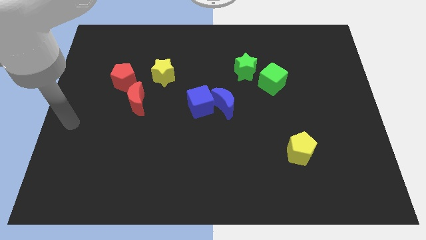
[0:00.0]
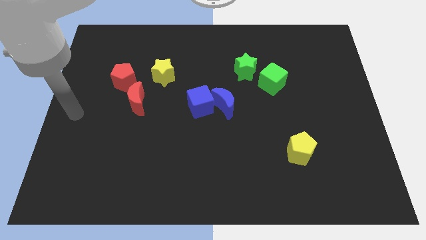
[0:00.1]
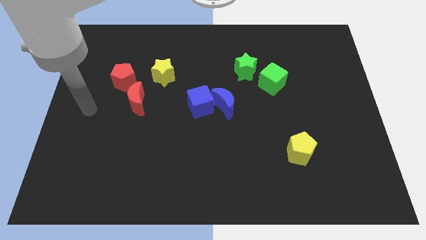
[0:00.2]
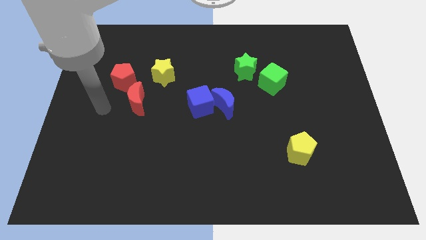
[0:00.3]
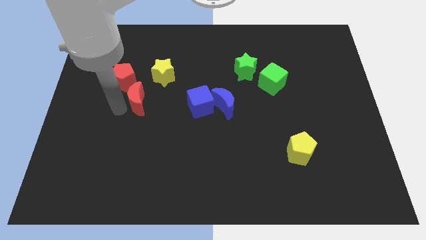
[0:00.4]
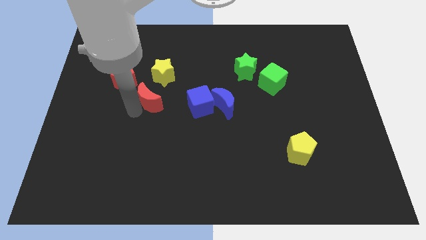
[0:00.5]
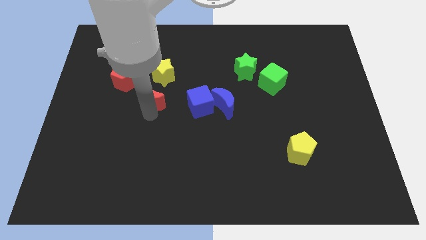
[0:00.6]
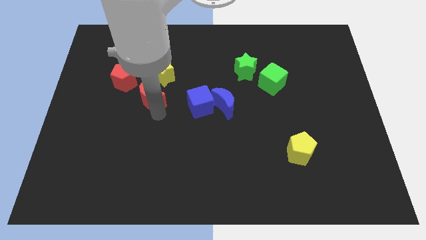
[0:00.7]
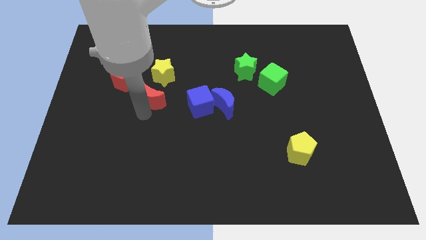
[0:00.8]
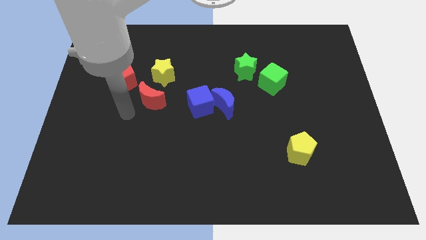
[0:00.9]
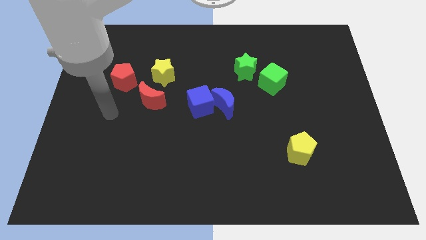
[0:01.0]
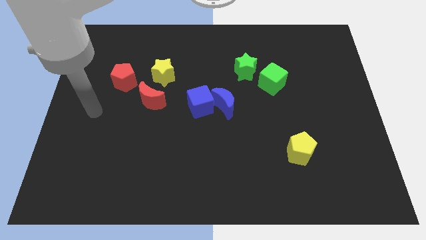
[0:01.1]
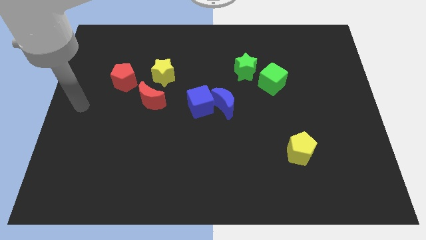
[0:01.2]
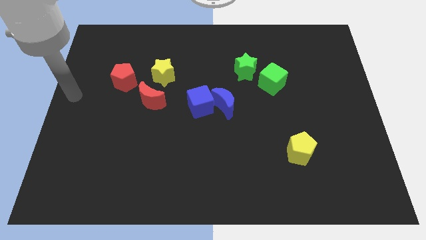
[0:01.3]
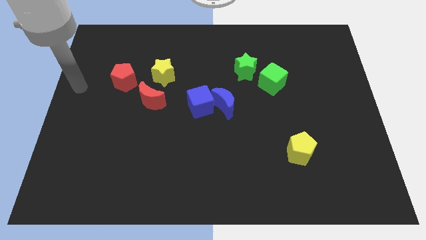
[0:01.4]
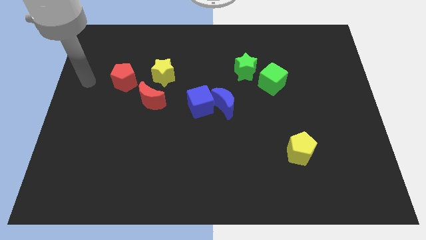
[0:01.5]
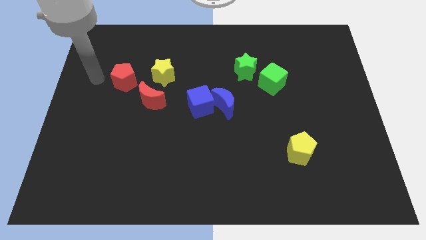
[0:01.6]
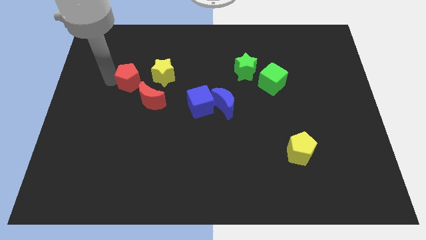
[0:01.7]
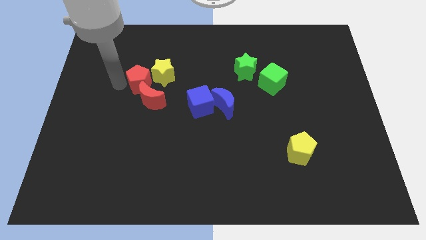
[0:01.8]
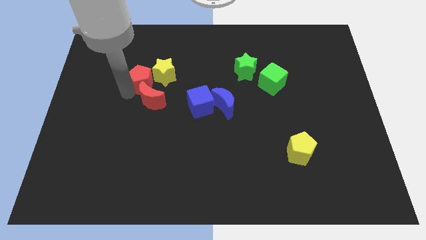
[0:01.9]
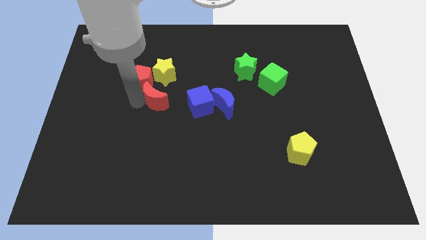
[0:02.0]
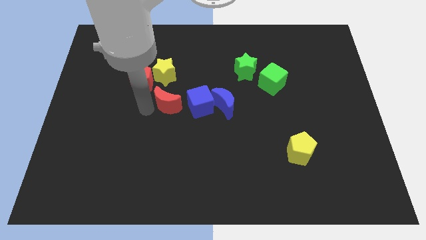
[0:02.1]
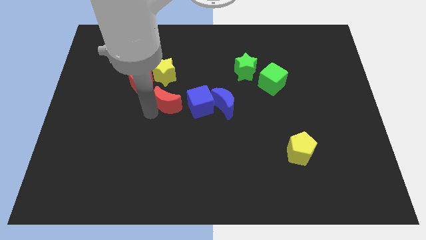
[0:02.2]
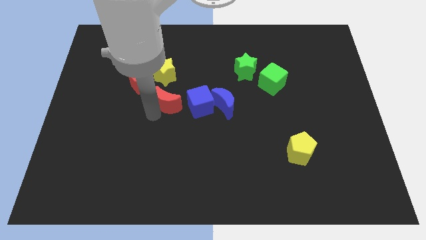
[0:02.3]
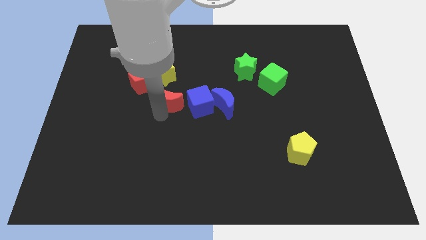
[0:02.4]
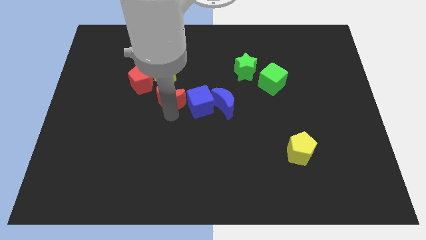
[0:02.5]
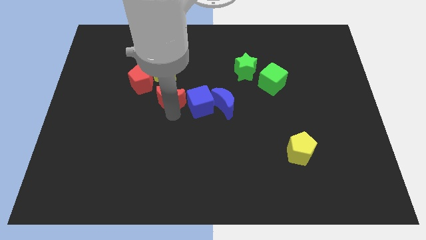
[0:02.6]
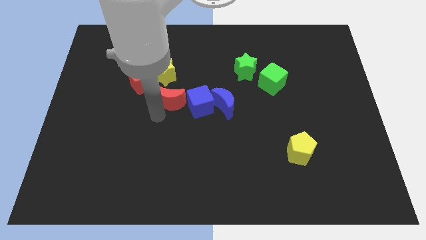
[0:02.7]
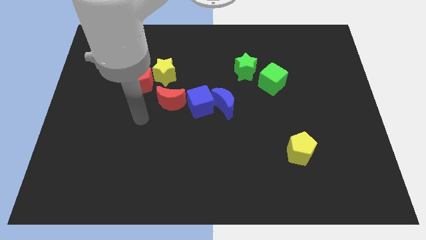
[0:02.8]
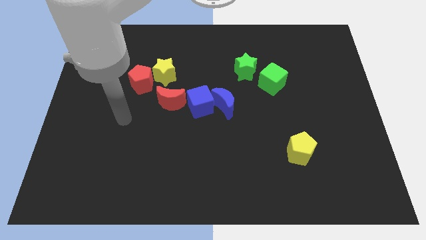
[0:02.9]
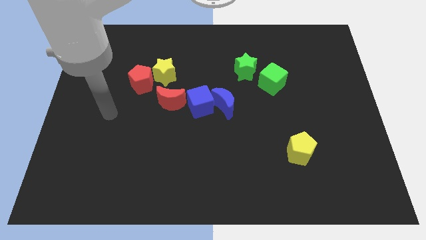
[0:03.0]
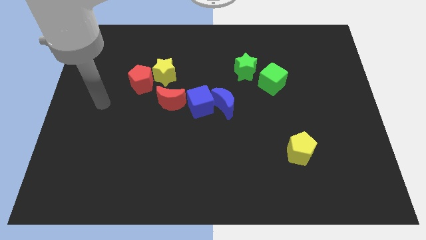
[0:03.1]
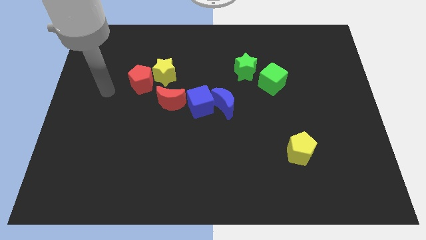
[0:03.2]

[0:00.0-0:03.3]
push the red crescent into the blue cube

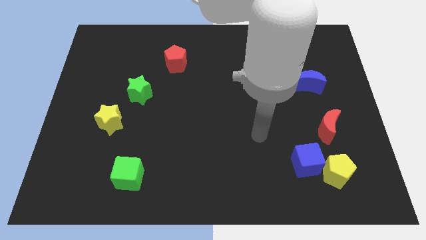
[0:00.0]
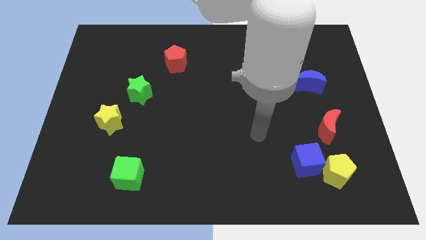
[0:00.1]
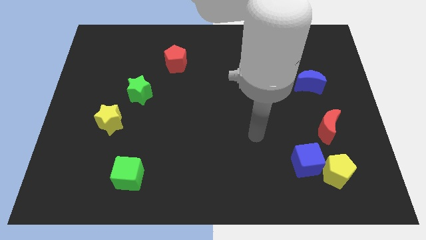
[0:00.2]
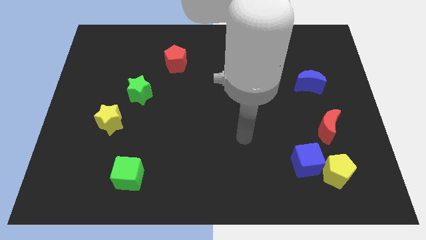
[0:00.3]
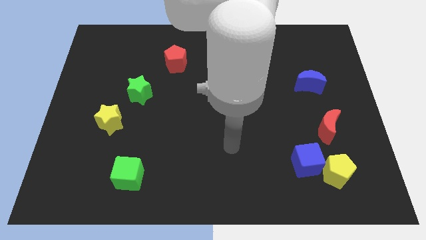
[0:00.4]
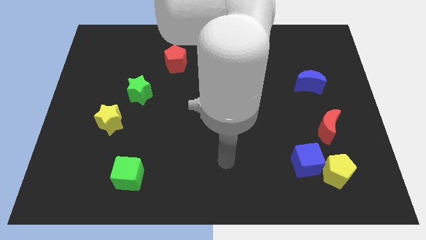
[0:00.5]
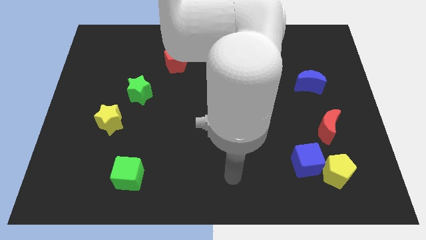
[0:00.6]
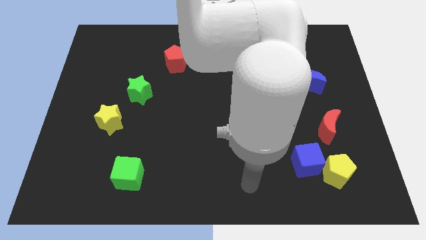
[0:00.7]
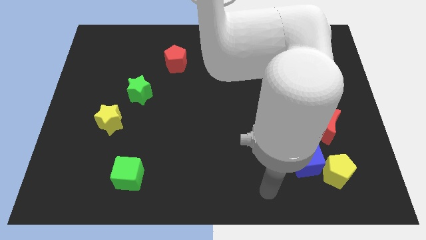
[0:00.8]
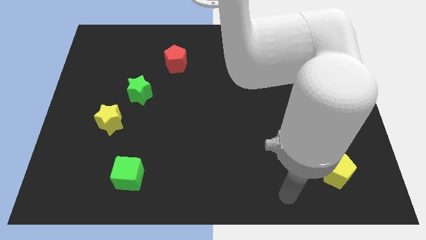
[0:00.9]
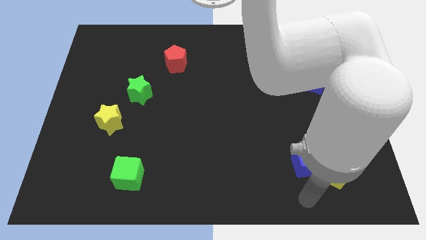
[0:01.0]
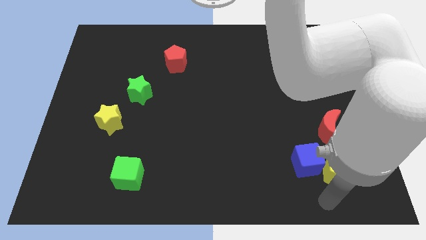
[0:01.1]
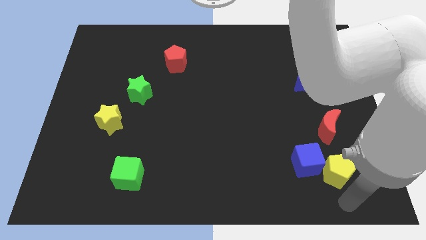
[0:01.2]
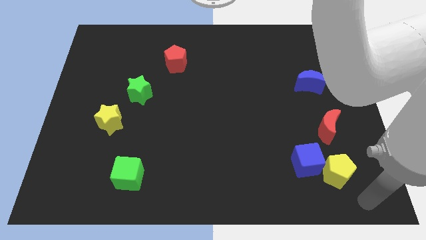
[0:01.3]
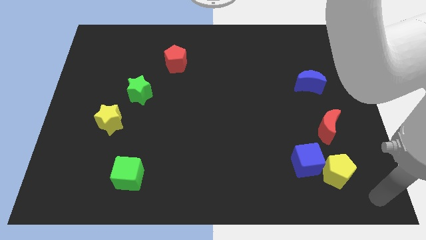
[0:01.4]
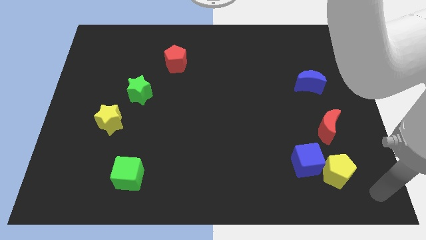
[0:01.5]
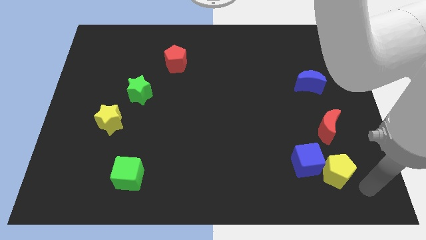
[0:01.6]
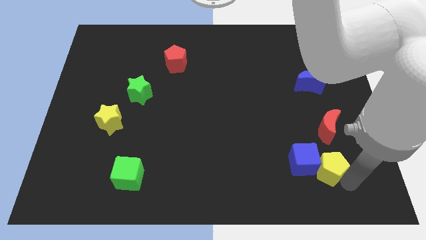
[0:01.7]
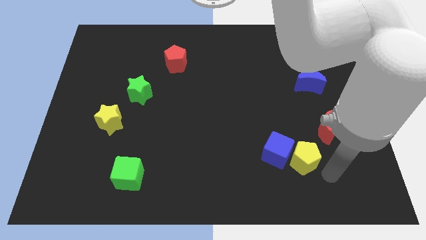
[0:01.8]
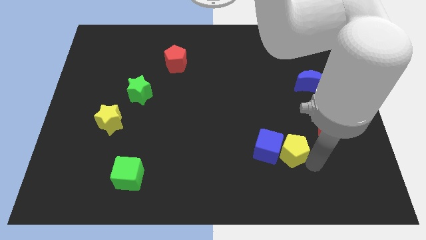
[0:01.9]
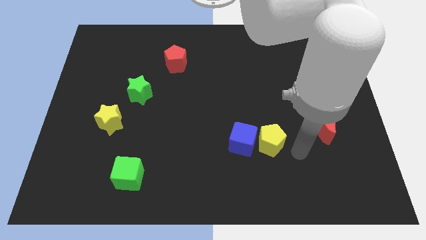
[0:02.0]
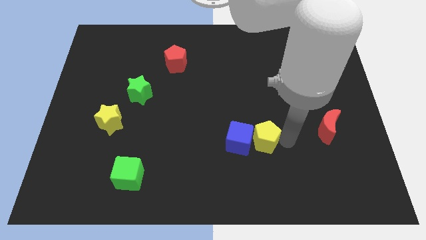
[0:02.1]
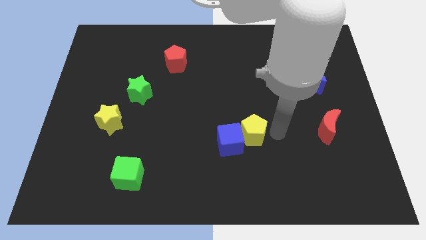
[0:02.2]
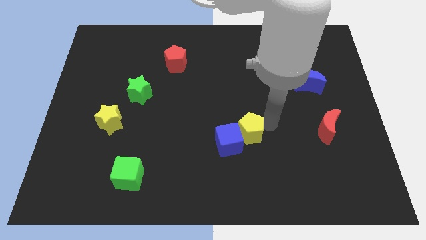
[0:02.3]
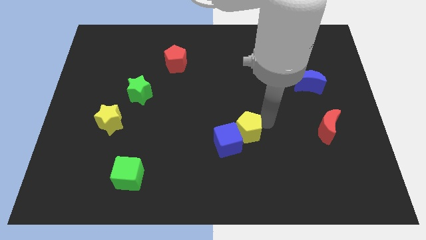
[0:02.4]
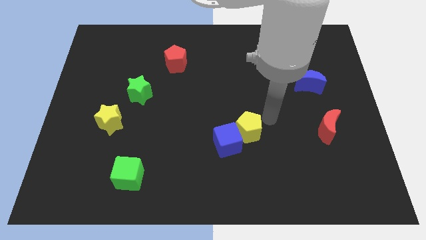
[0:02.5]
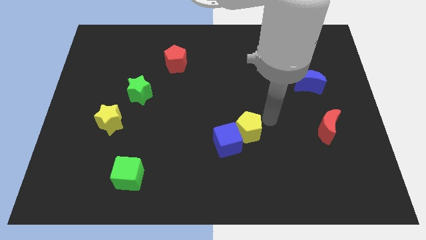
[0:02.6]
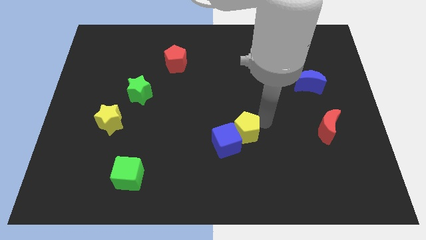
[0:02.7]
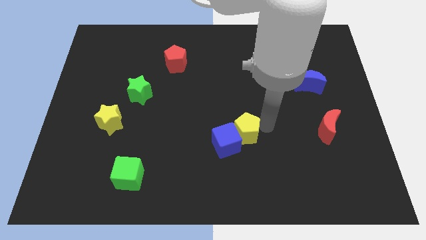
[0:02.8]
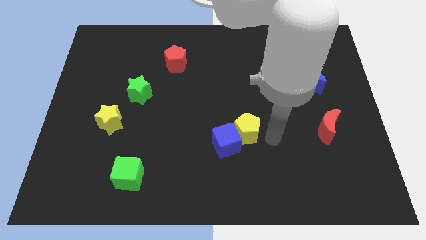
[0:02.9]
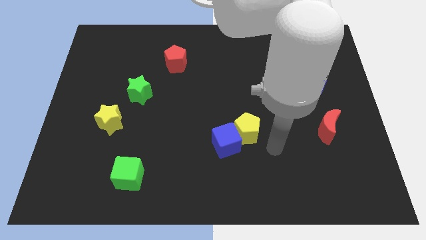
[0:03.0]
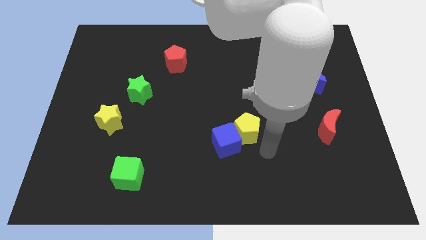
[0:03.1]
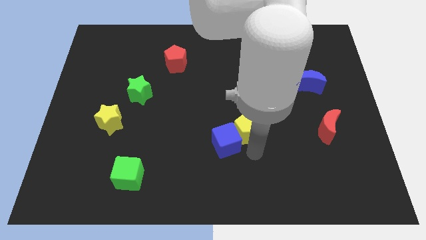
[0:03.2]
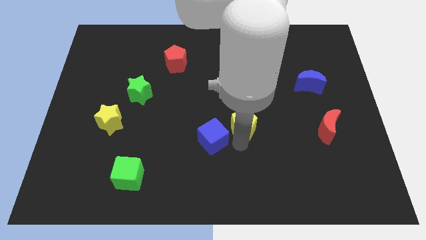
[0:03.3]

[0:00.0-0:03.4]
move the yellow pentagon into the blue cube towards the center

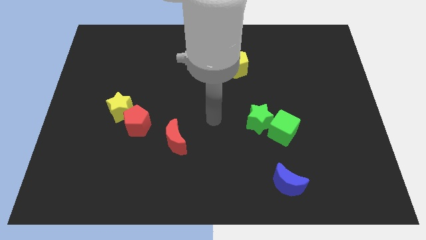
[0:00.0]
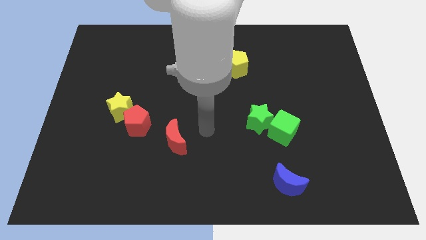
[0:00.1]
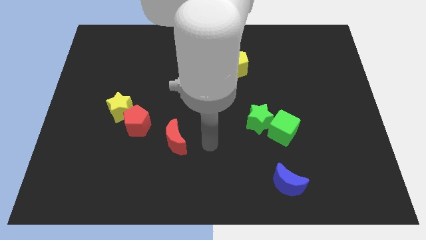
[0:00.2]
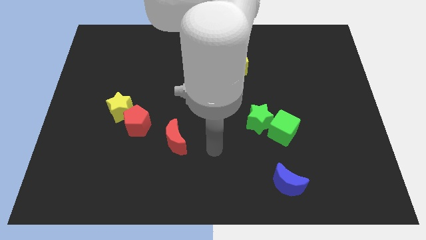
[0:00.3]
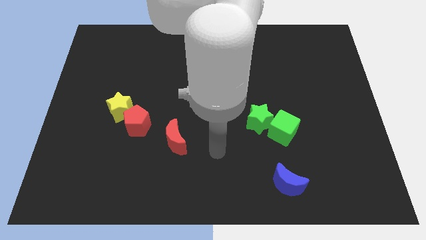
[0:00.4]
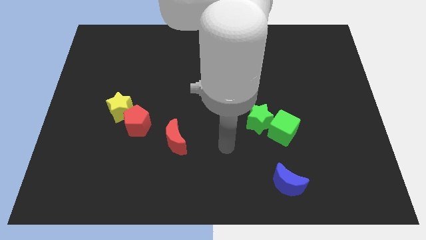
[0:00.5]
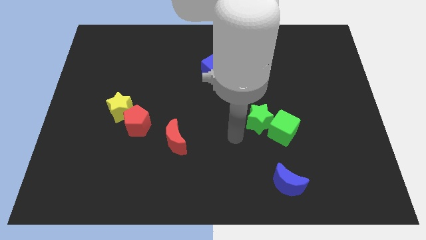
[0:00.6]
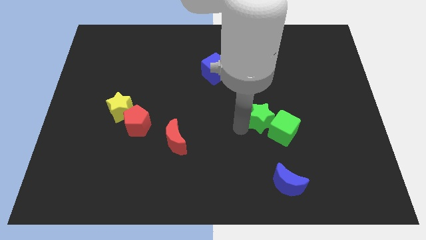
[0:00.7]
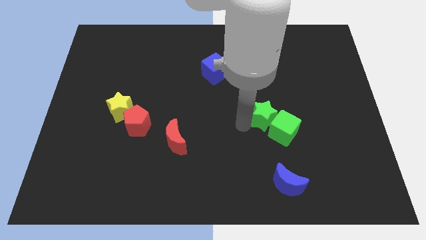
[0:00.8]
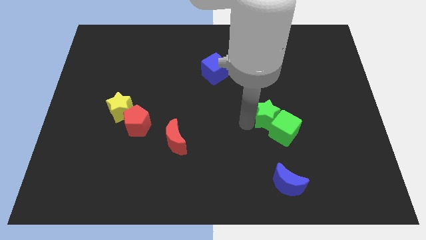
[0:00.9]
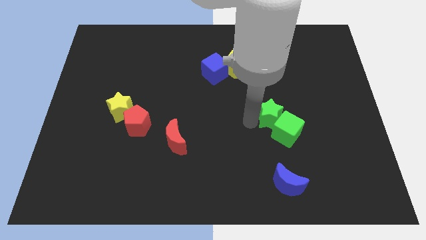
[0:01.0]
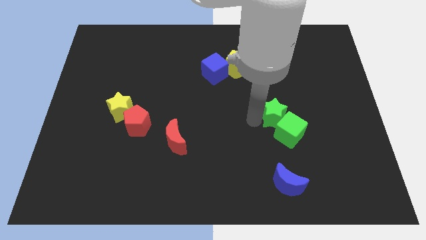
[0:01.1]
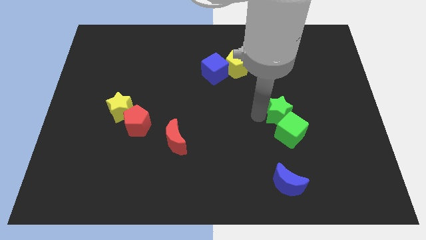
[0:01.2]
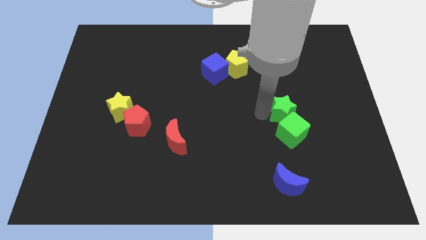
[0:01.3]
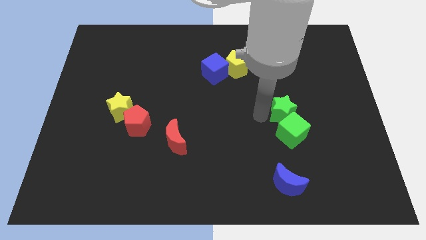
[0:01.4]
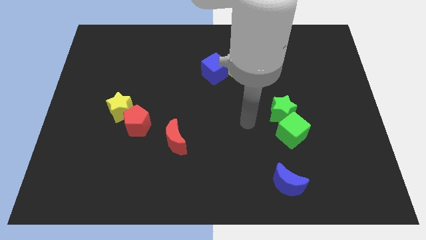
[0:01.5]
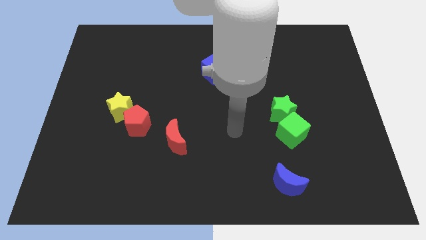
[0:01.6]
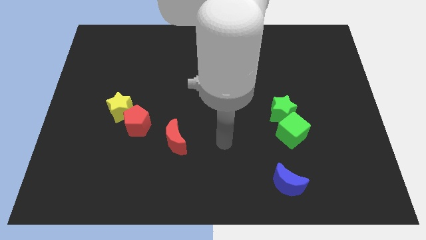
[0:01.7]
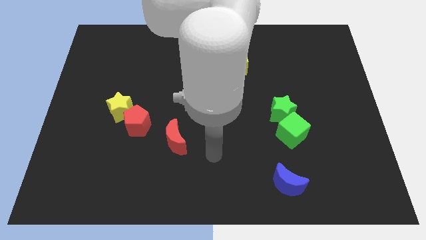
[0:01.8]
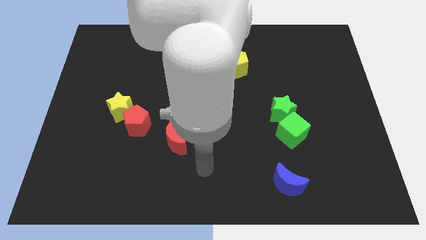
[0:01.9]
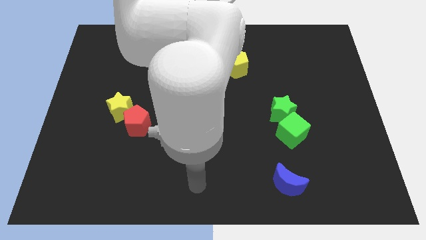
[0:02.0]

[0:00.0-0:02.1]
slide green blocks on top of blue moon

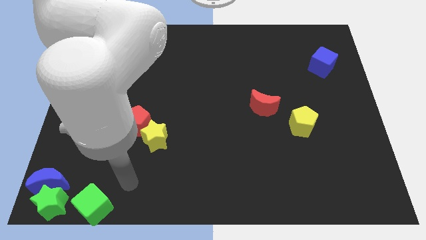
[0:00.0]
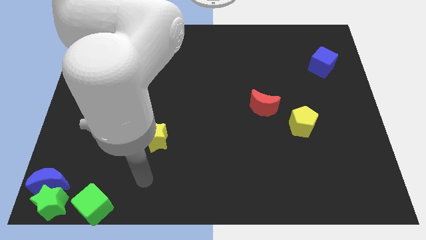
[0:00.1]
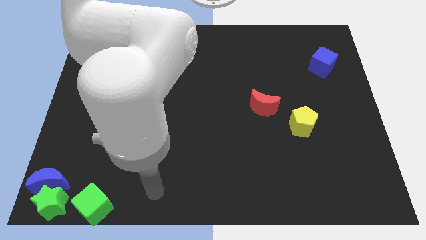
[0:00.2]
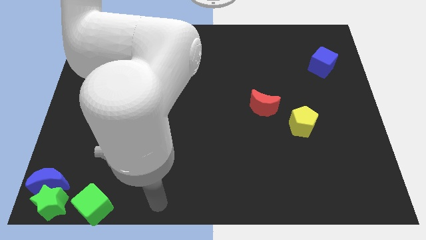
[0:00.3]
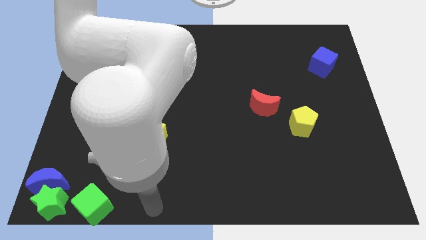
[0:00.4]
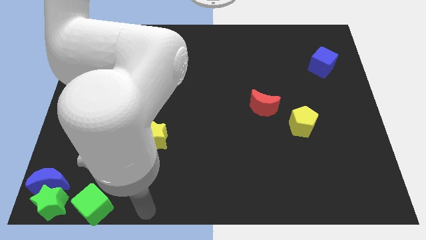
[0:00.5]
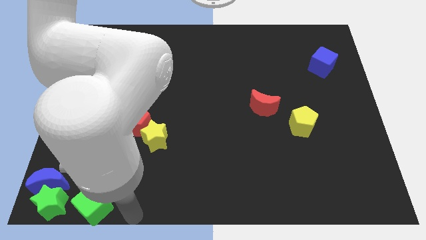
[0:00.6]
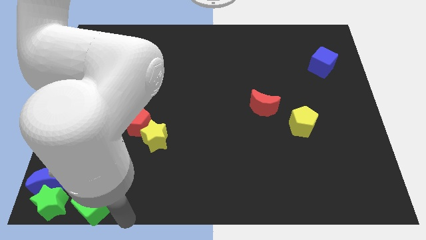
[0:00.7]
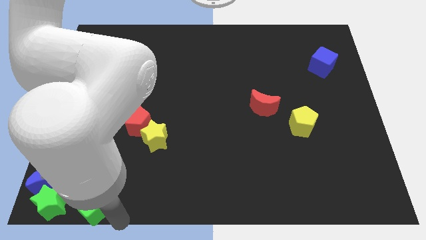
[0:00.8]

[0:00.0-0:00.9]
put your arm to the right side of green cube
